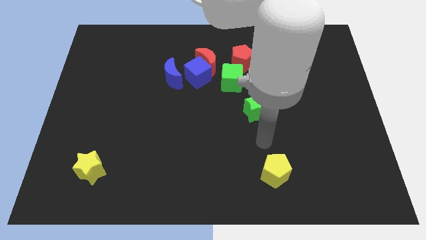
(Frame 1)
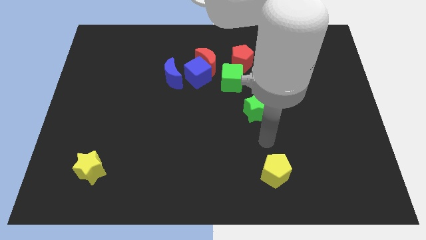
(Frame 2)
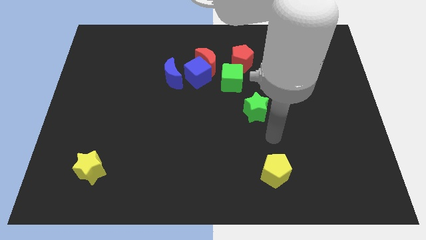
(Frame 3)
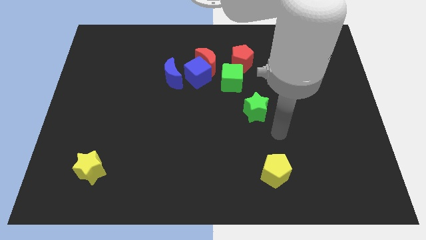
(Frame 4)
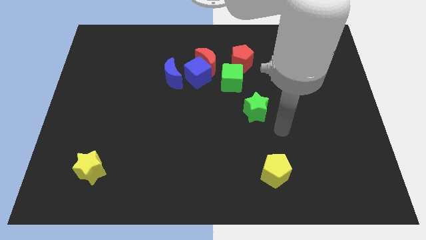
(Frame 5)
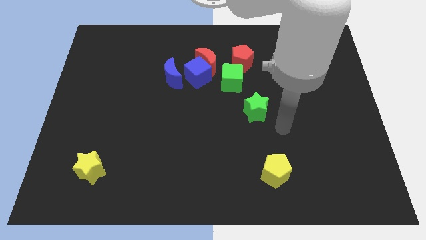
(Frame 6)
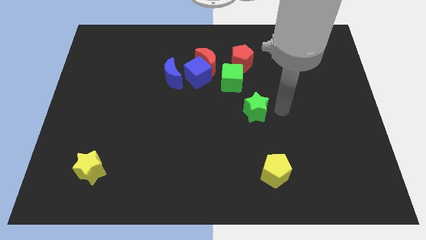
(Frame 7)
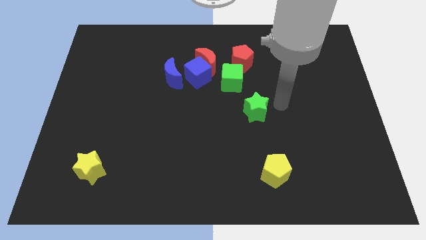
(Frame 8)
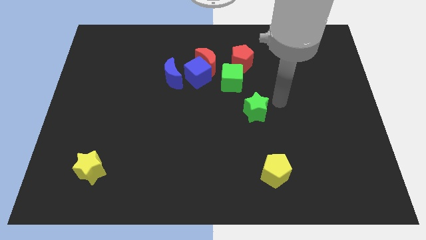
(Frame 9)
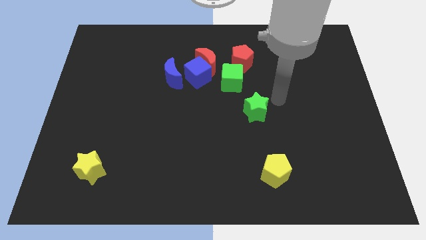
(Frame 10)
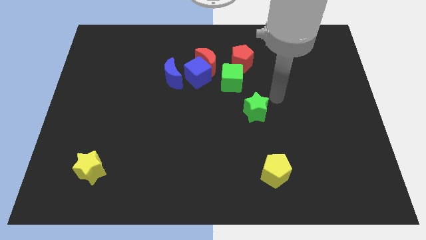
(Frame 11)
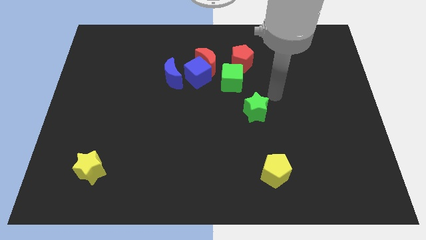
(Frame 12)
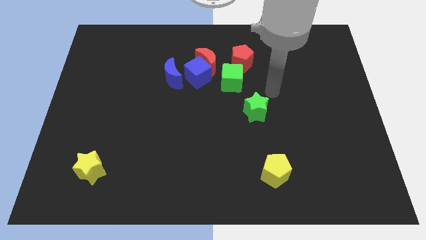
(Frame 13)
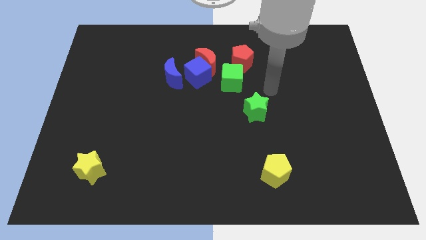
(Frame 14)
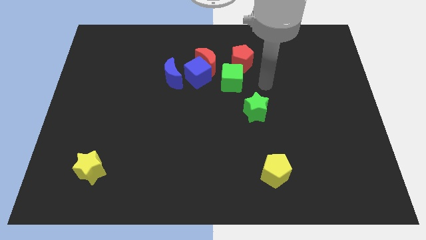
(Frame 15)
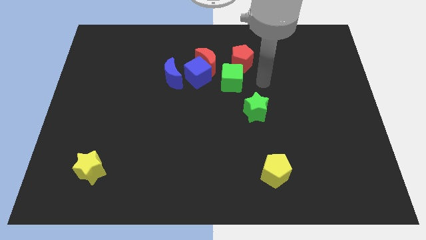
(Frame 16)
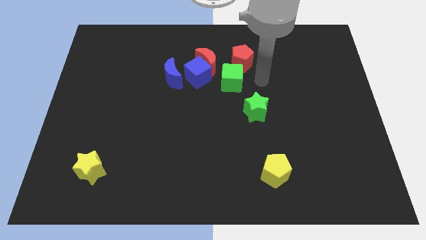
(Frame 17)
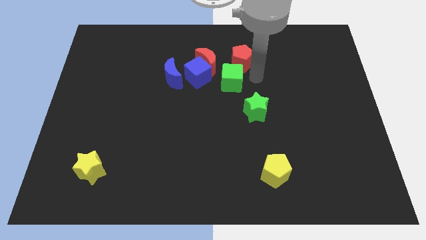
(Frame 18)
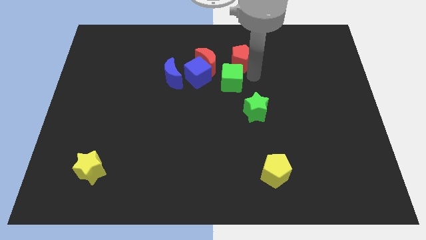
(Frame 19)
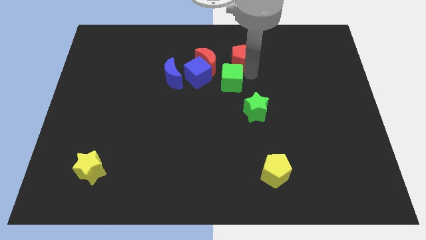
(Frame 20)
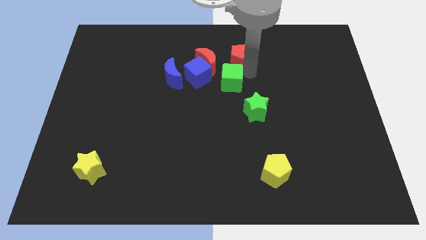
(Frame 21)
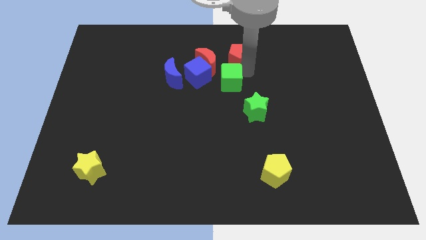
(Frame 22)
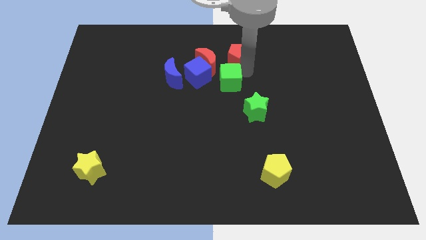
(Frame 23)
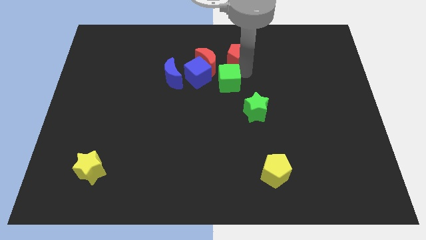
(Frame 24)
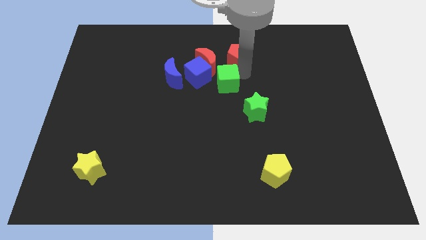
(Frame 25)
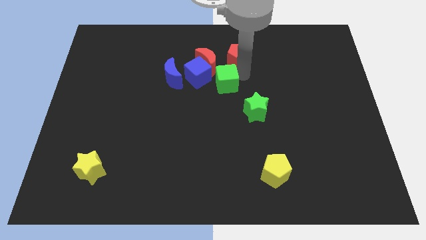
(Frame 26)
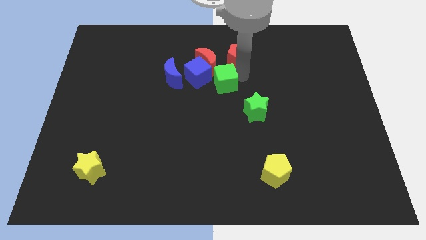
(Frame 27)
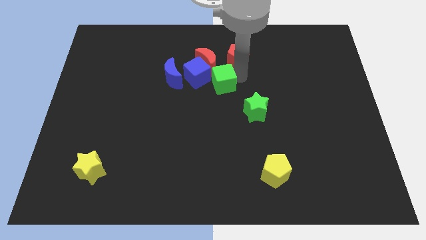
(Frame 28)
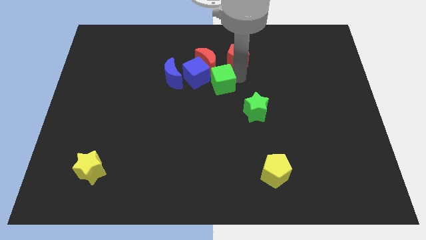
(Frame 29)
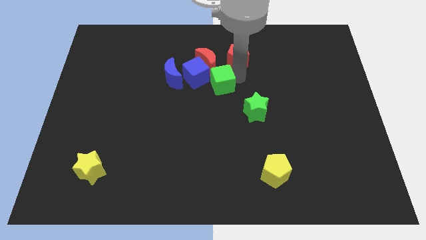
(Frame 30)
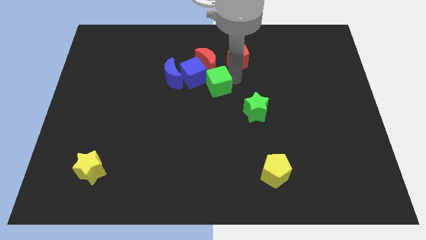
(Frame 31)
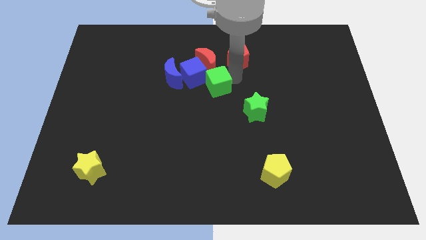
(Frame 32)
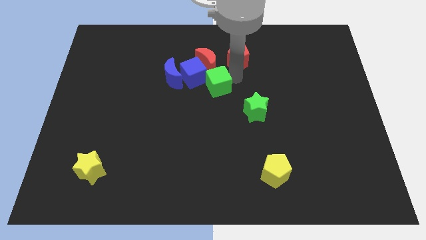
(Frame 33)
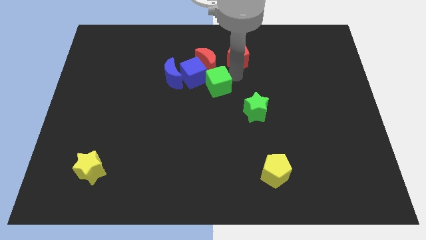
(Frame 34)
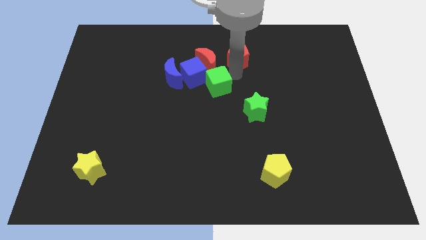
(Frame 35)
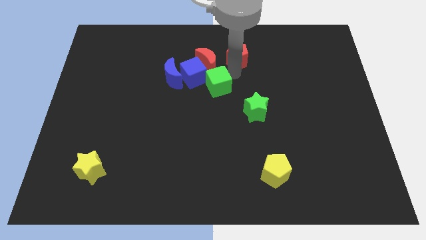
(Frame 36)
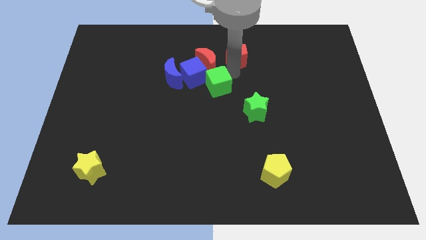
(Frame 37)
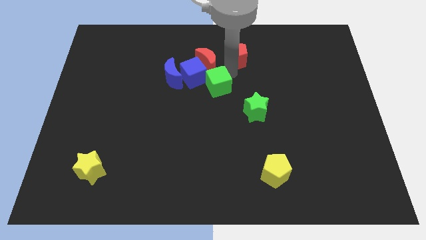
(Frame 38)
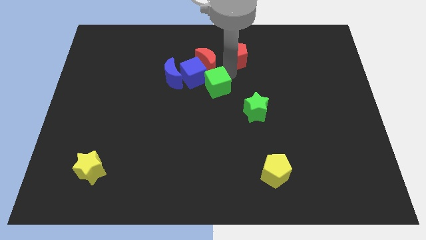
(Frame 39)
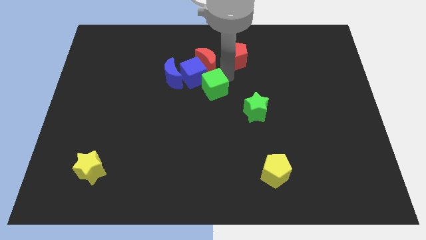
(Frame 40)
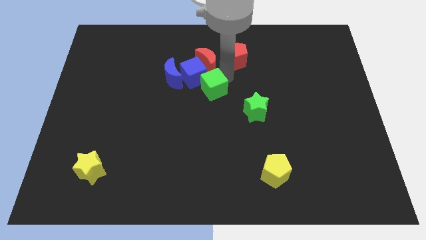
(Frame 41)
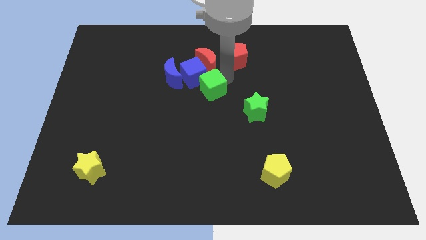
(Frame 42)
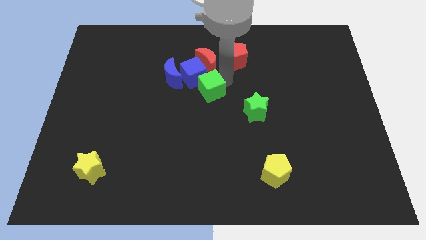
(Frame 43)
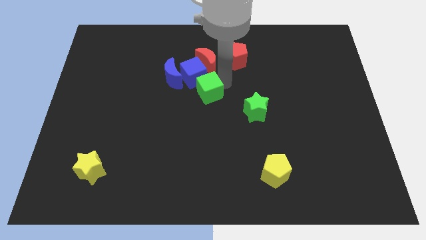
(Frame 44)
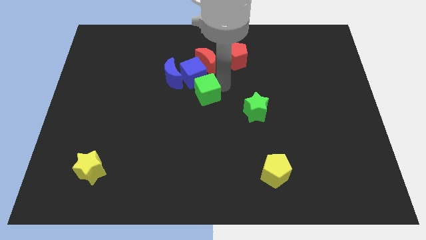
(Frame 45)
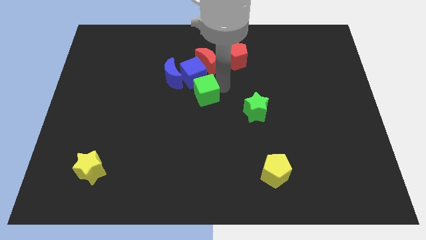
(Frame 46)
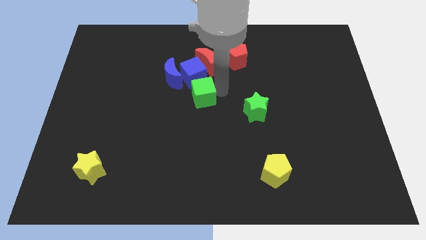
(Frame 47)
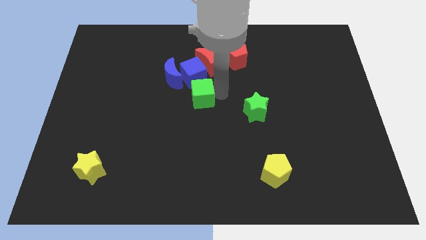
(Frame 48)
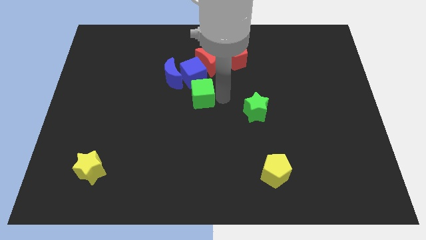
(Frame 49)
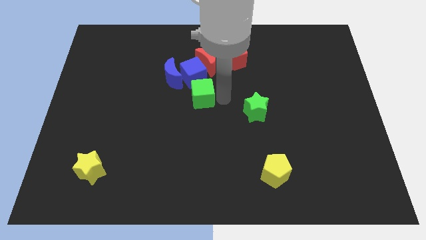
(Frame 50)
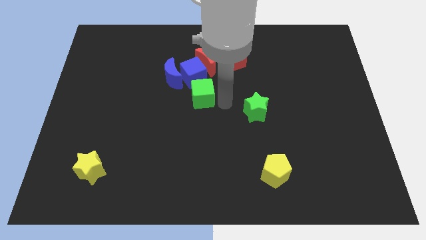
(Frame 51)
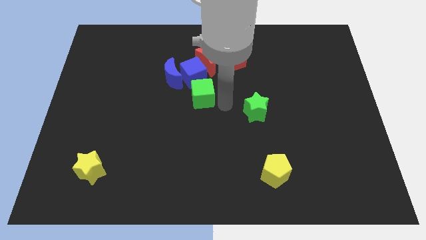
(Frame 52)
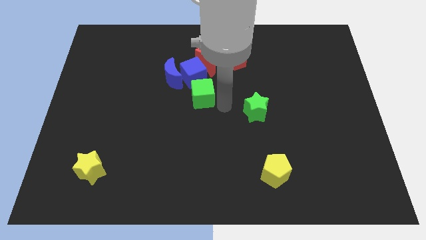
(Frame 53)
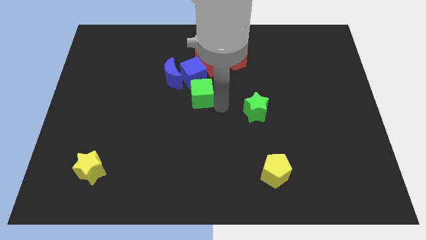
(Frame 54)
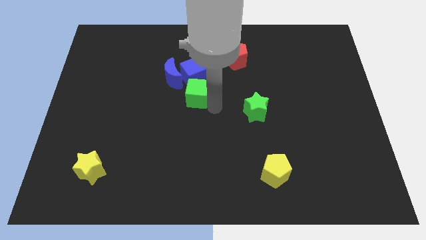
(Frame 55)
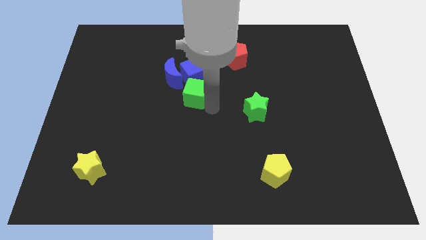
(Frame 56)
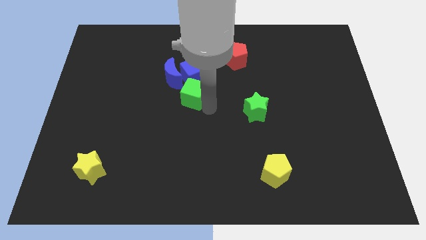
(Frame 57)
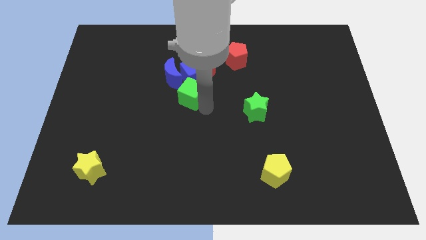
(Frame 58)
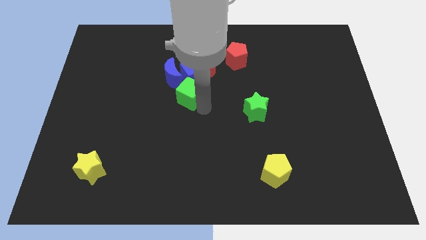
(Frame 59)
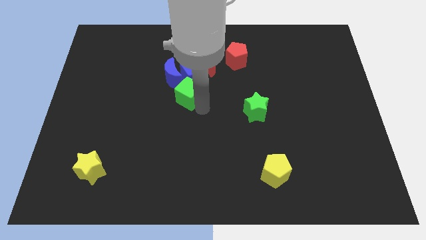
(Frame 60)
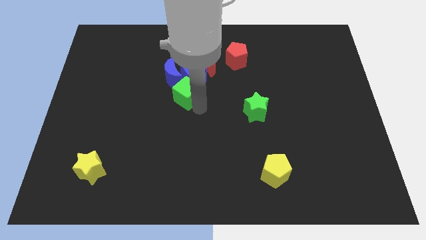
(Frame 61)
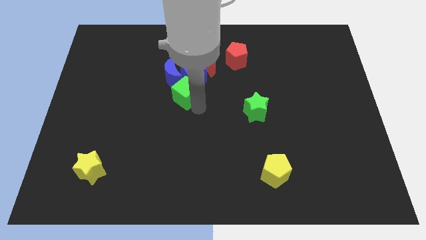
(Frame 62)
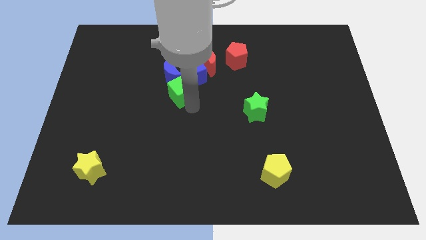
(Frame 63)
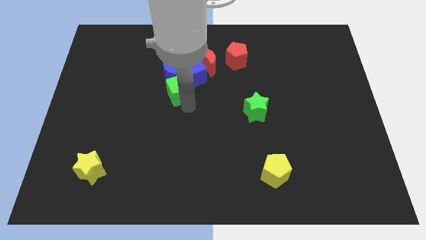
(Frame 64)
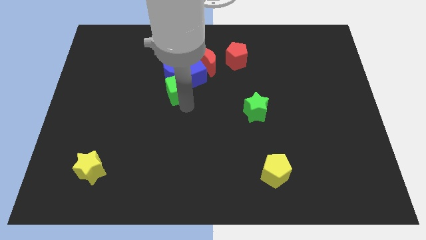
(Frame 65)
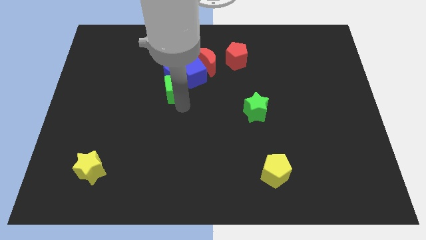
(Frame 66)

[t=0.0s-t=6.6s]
put the green cube to the blue moon

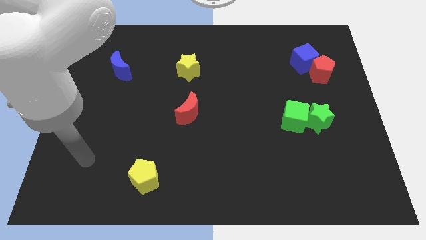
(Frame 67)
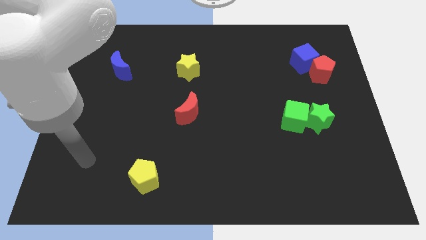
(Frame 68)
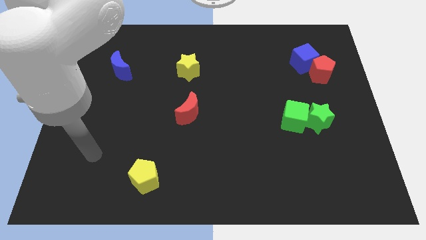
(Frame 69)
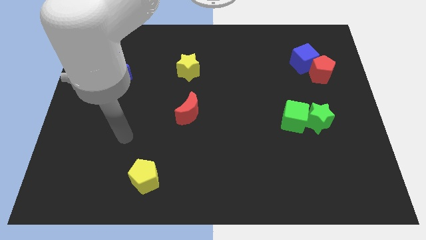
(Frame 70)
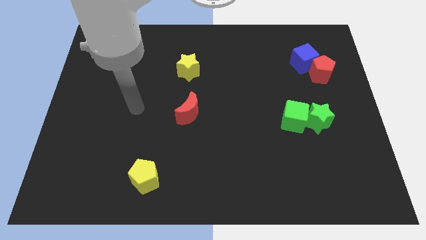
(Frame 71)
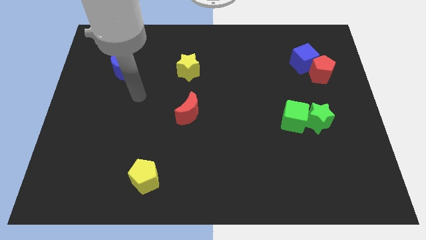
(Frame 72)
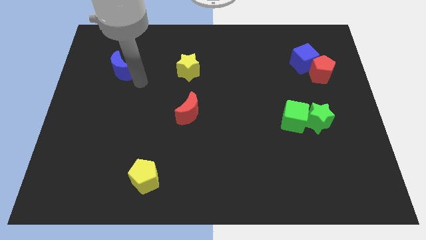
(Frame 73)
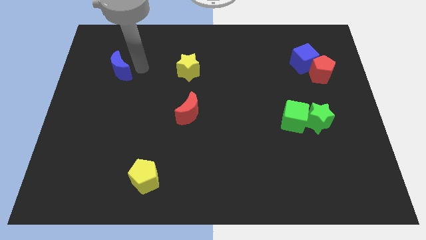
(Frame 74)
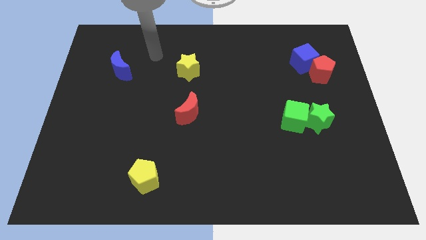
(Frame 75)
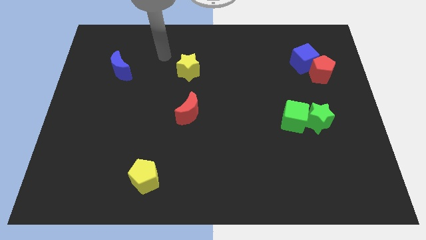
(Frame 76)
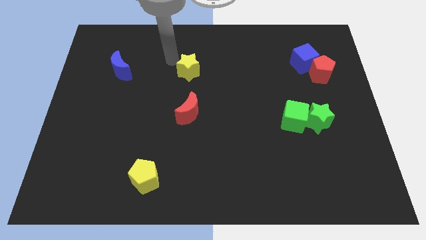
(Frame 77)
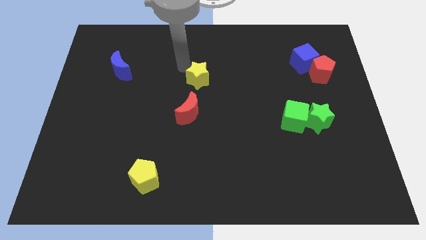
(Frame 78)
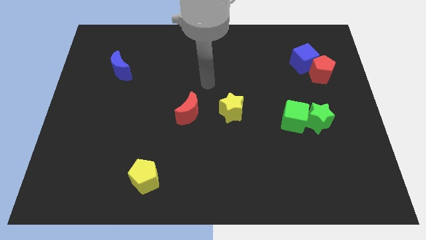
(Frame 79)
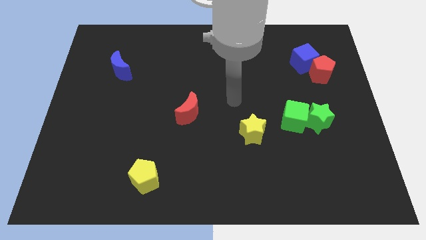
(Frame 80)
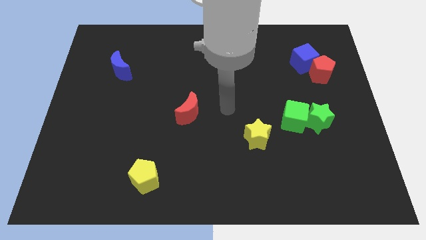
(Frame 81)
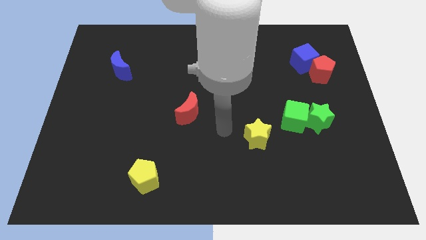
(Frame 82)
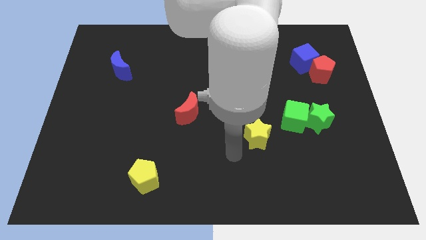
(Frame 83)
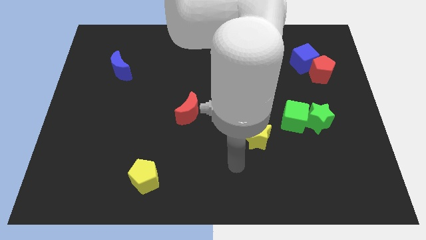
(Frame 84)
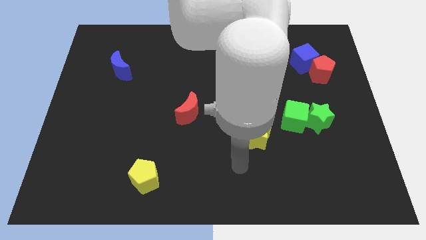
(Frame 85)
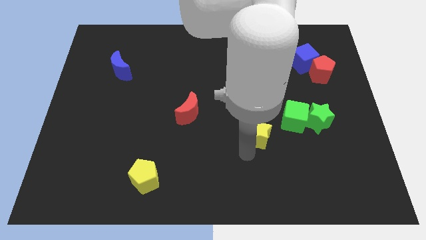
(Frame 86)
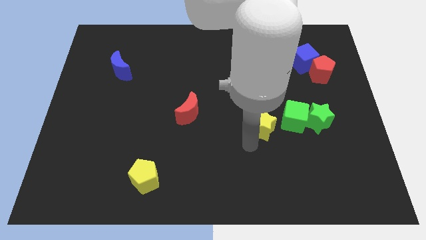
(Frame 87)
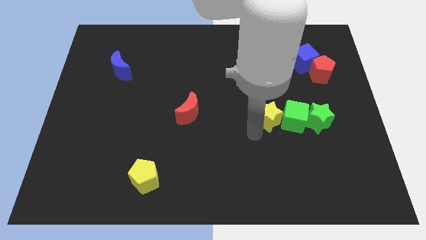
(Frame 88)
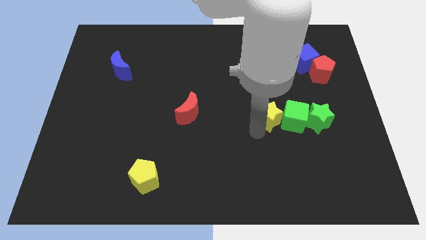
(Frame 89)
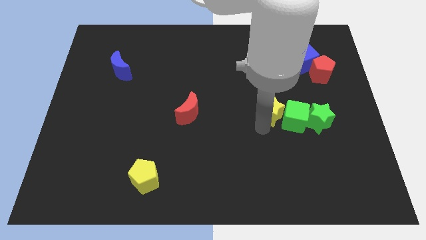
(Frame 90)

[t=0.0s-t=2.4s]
put the yellow star next to the green cube
